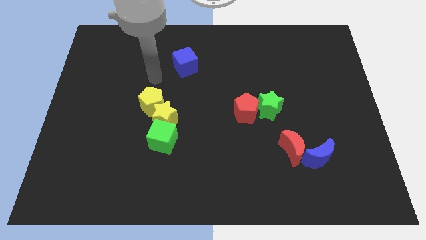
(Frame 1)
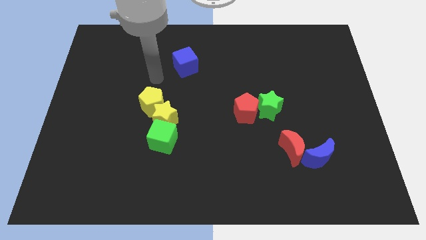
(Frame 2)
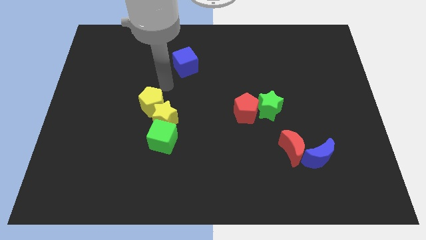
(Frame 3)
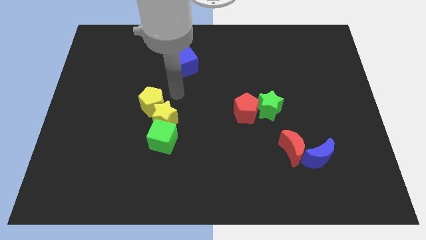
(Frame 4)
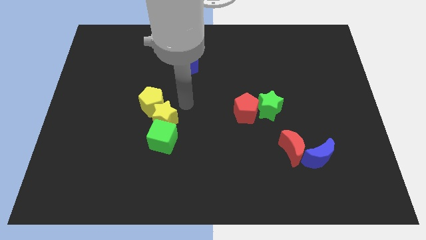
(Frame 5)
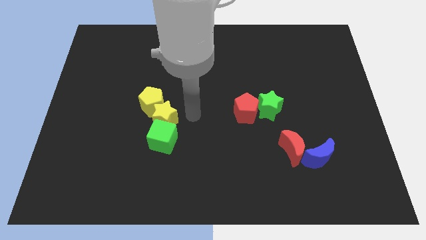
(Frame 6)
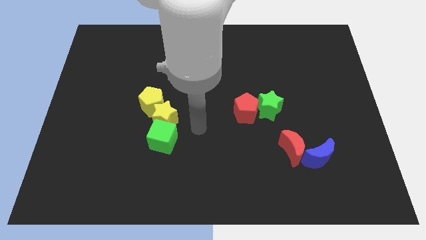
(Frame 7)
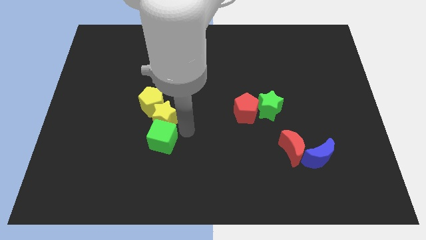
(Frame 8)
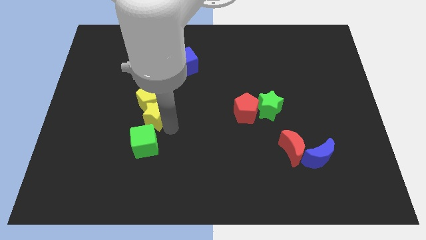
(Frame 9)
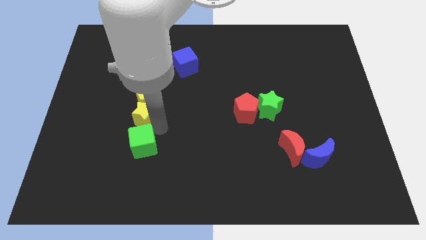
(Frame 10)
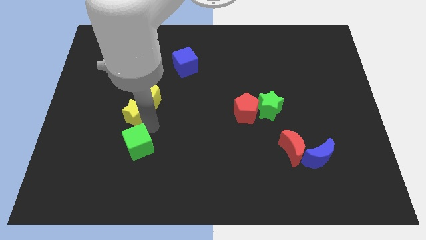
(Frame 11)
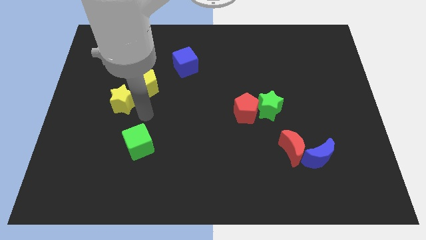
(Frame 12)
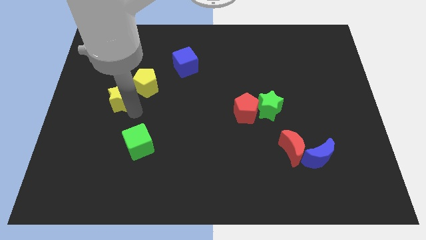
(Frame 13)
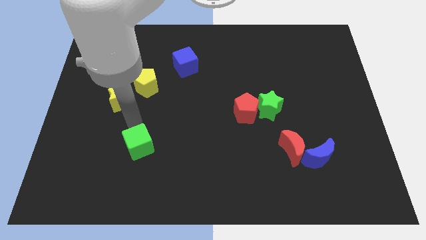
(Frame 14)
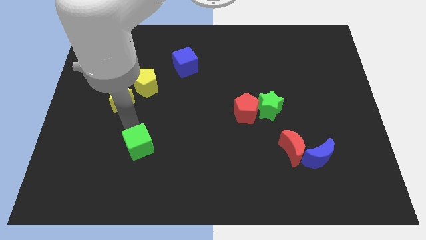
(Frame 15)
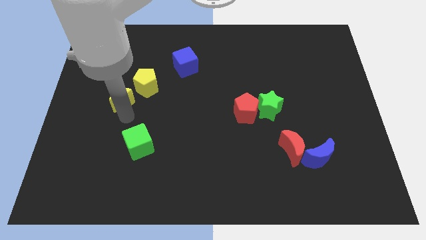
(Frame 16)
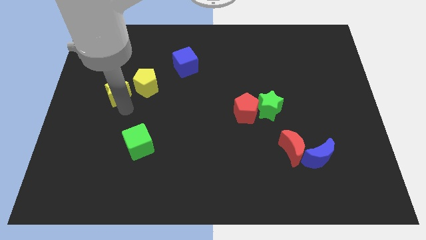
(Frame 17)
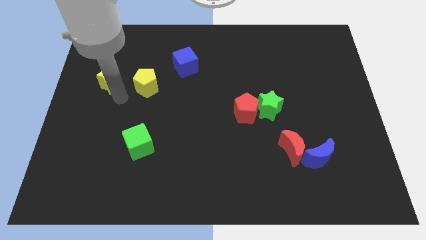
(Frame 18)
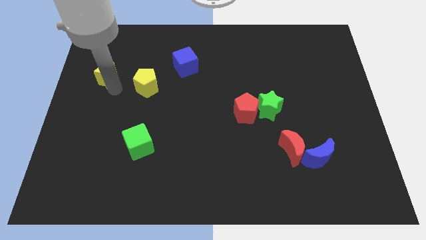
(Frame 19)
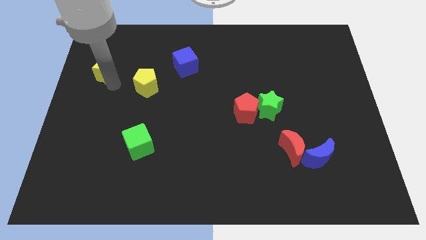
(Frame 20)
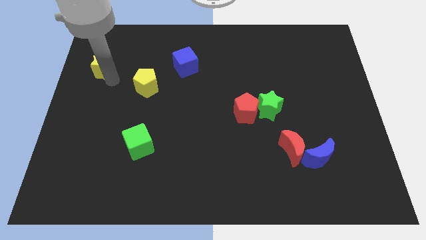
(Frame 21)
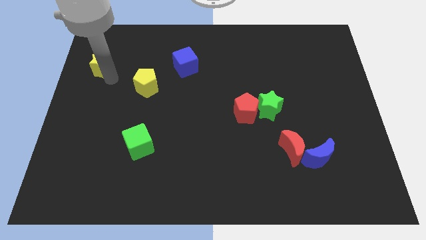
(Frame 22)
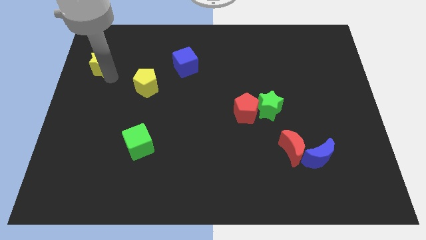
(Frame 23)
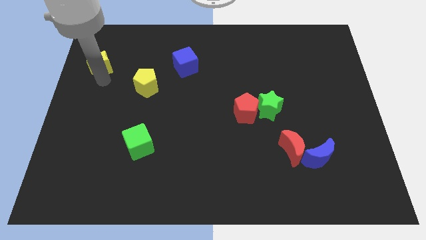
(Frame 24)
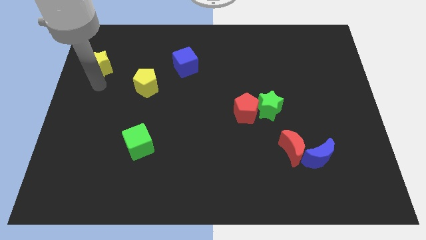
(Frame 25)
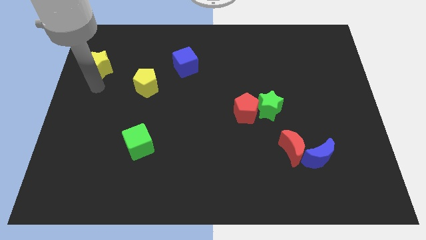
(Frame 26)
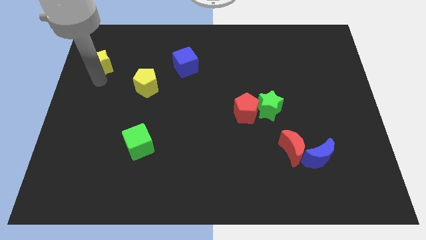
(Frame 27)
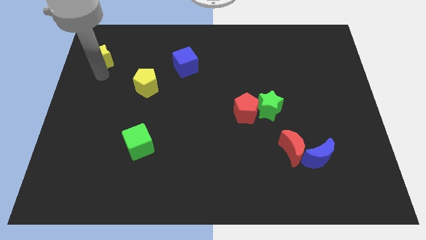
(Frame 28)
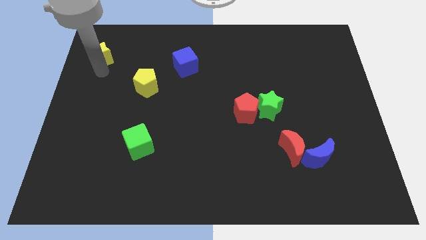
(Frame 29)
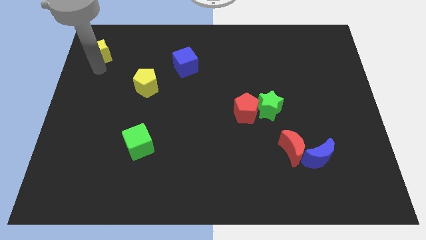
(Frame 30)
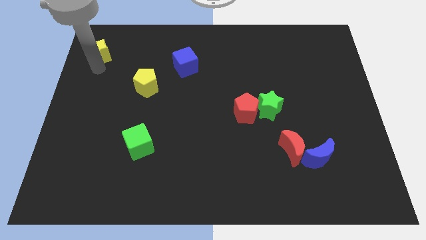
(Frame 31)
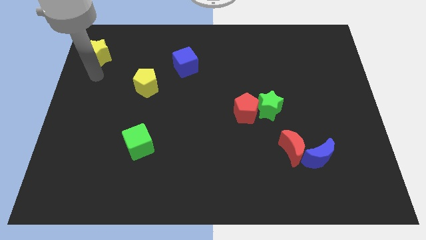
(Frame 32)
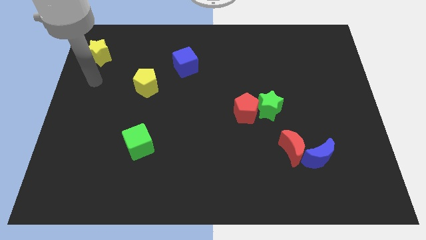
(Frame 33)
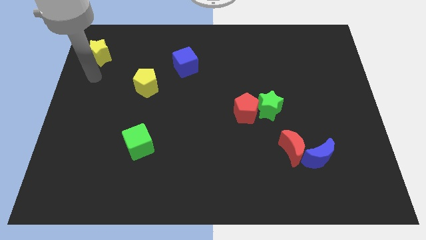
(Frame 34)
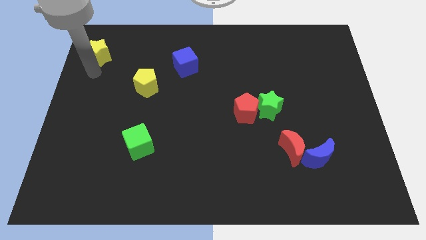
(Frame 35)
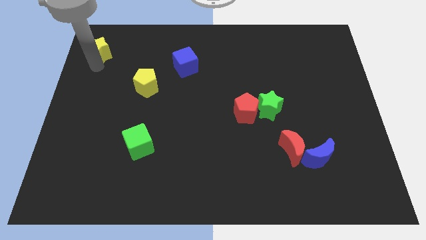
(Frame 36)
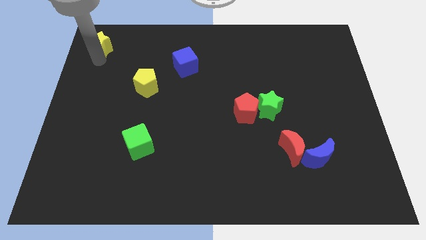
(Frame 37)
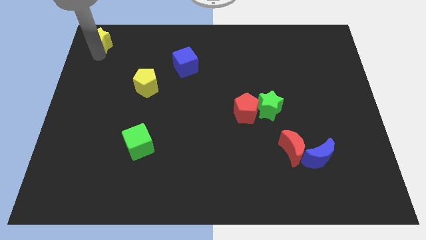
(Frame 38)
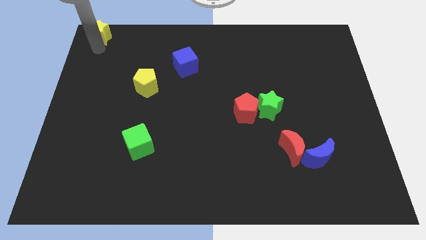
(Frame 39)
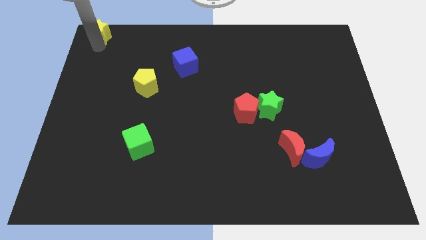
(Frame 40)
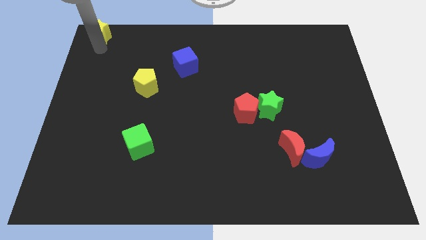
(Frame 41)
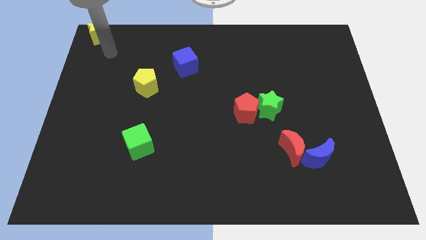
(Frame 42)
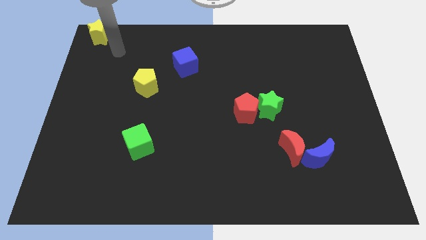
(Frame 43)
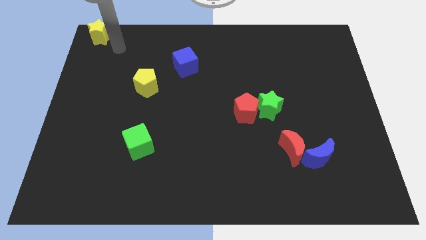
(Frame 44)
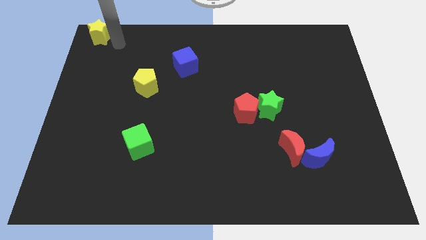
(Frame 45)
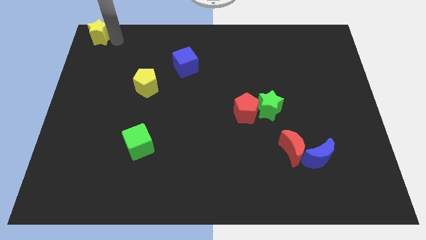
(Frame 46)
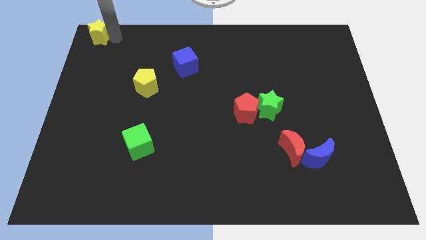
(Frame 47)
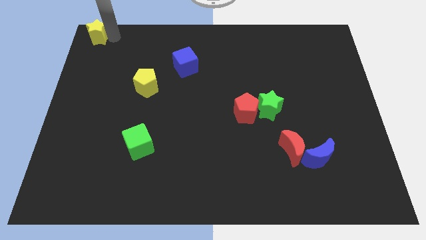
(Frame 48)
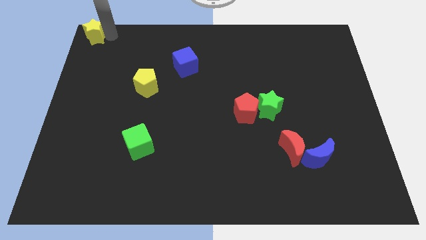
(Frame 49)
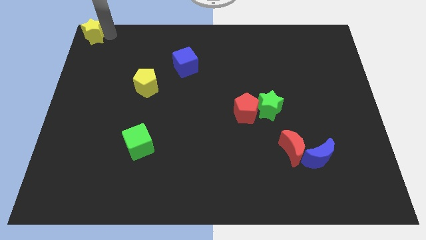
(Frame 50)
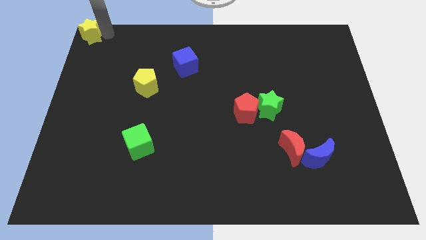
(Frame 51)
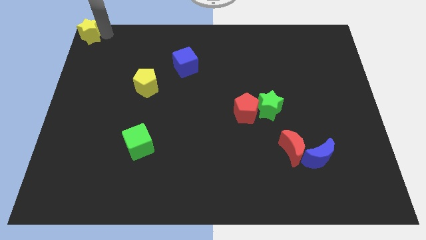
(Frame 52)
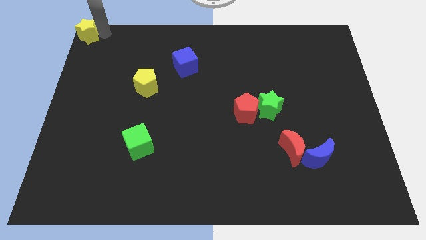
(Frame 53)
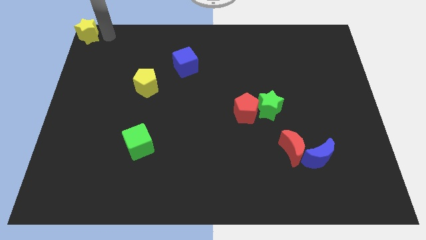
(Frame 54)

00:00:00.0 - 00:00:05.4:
move yellow star to the top left corner

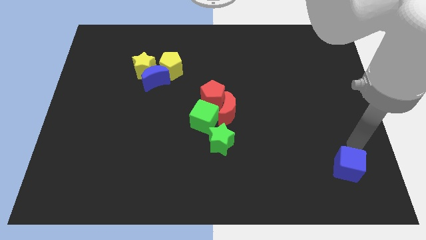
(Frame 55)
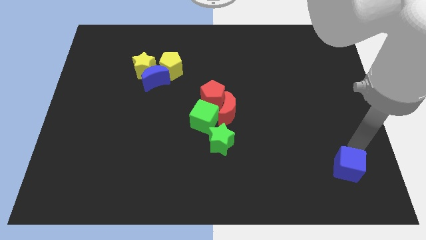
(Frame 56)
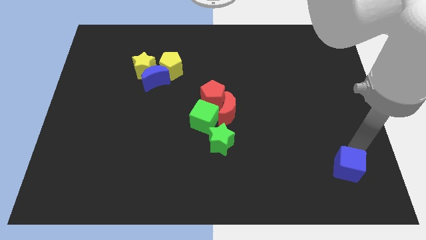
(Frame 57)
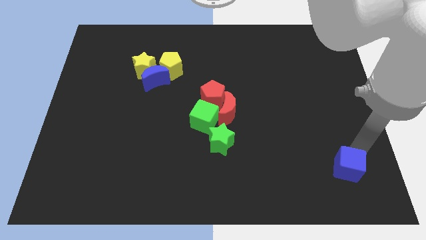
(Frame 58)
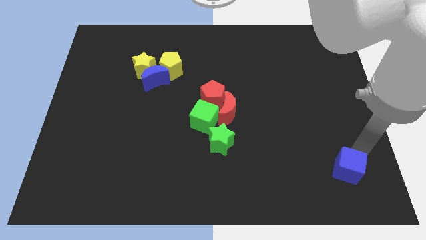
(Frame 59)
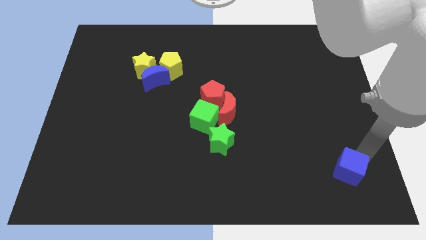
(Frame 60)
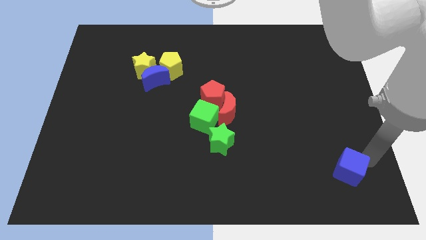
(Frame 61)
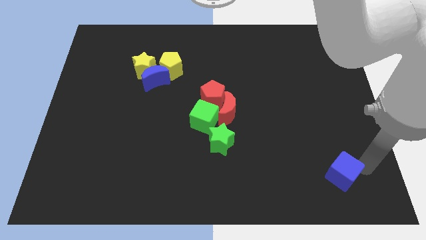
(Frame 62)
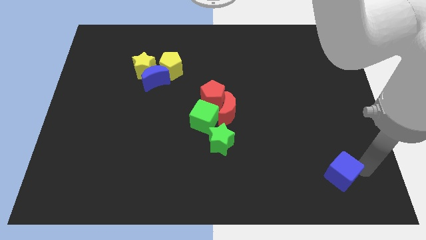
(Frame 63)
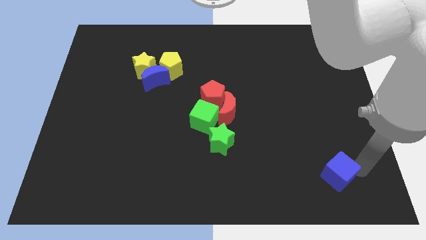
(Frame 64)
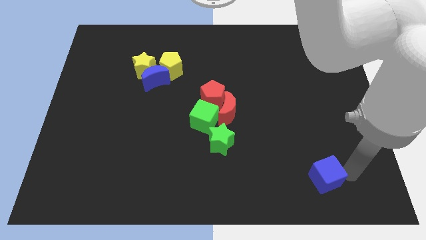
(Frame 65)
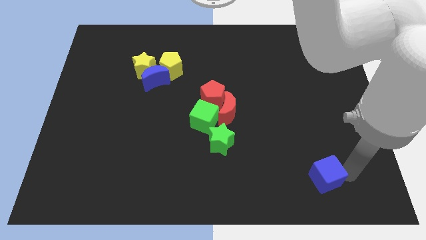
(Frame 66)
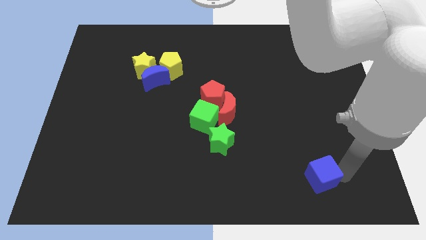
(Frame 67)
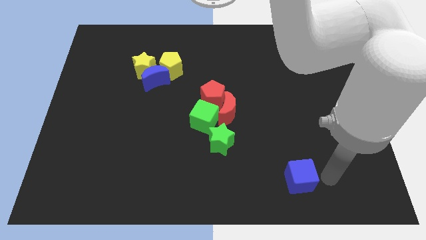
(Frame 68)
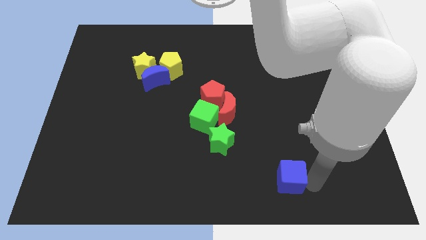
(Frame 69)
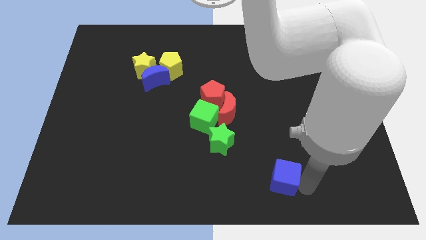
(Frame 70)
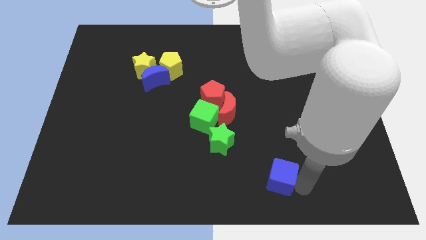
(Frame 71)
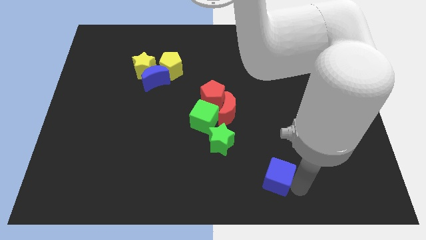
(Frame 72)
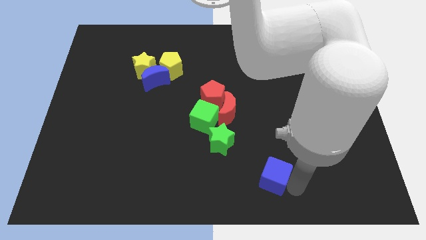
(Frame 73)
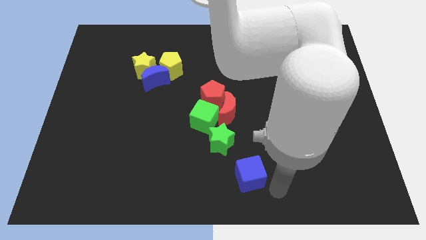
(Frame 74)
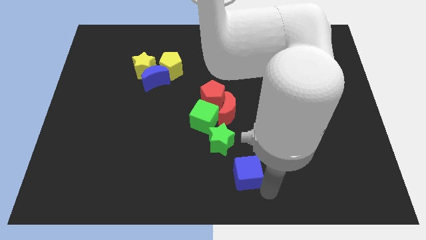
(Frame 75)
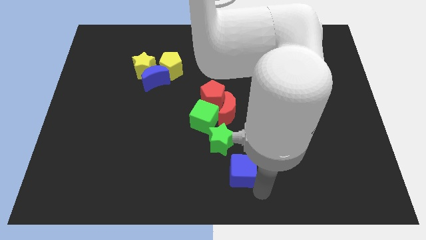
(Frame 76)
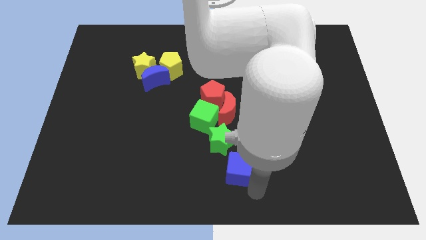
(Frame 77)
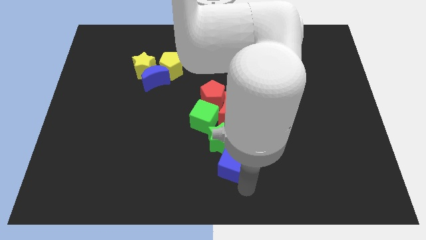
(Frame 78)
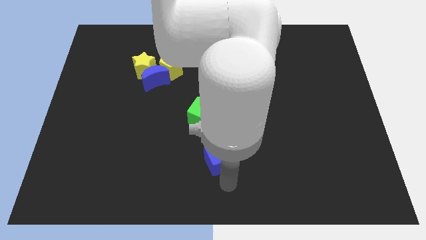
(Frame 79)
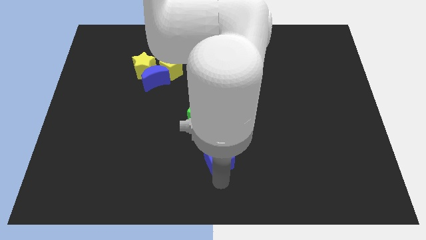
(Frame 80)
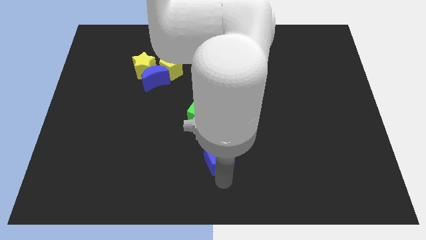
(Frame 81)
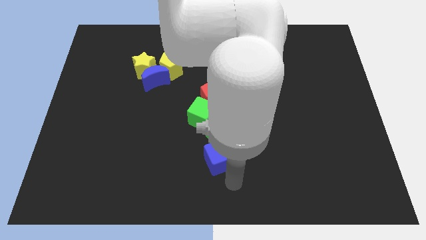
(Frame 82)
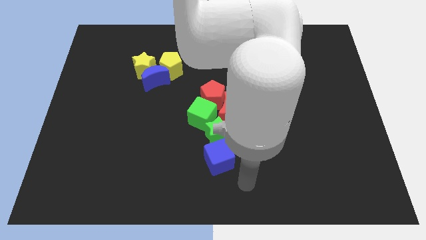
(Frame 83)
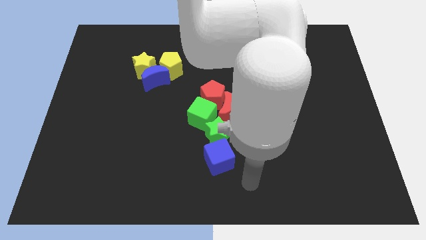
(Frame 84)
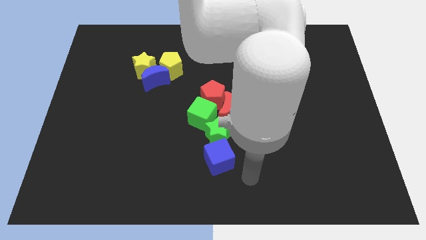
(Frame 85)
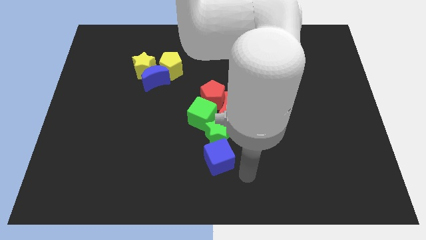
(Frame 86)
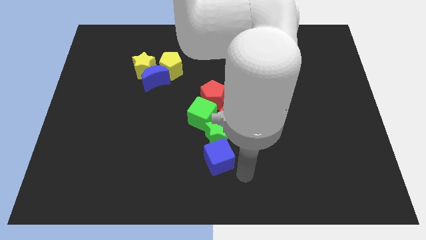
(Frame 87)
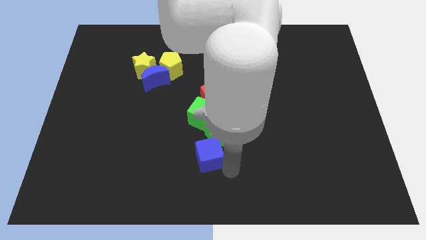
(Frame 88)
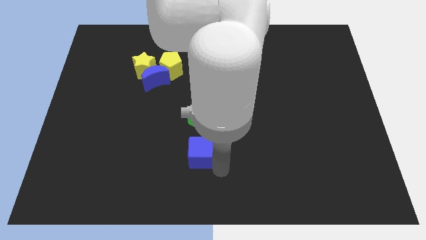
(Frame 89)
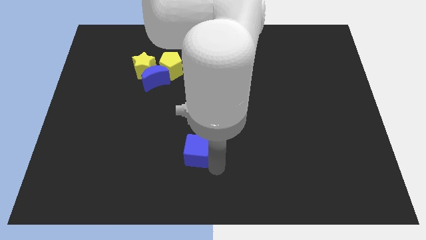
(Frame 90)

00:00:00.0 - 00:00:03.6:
place the blue cube below the green star
